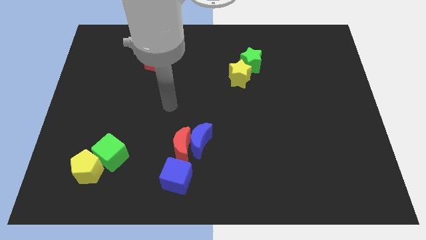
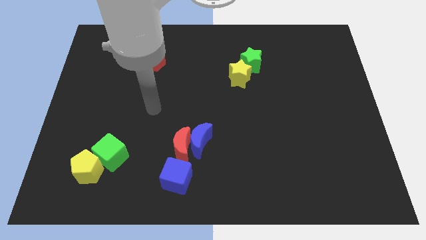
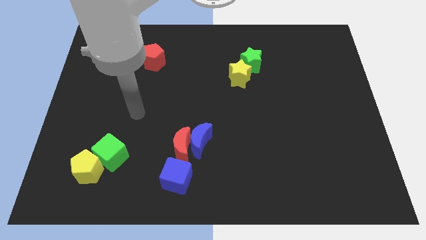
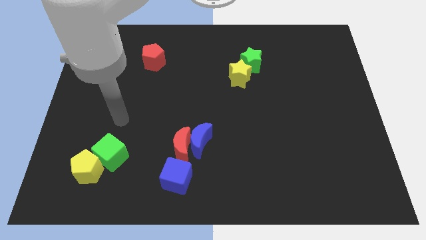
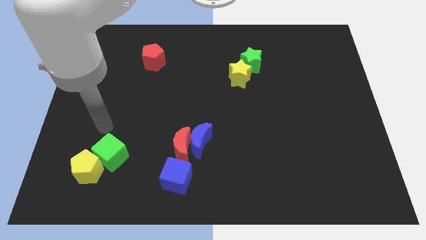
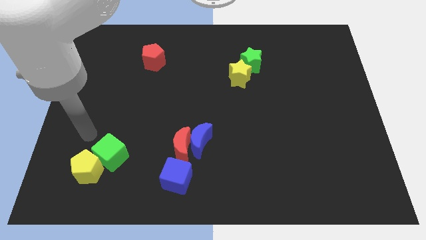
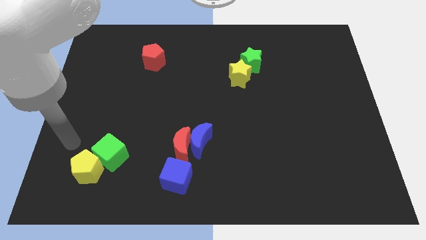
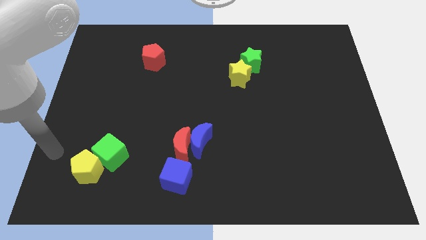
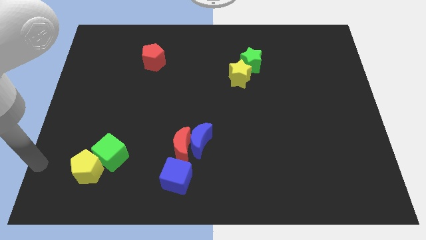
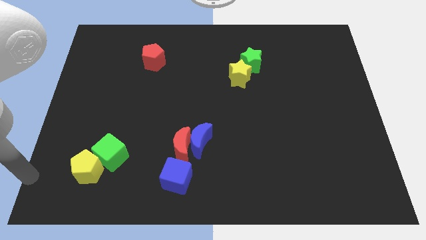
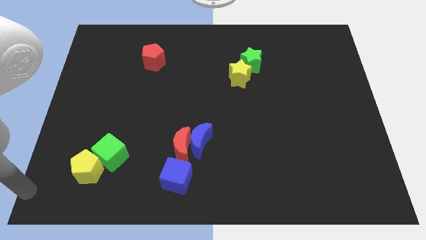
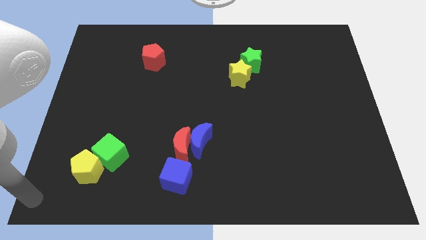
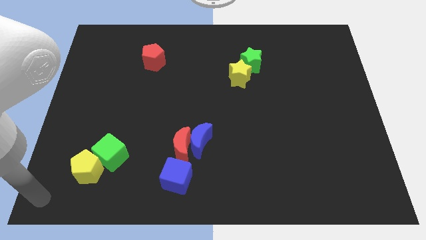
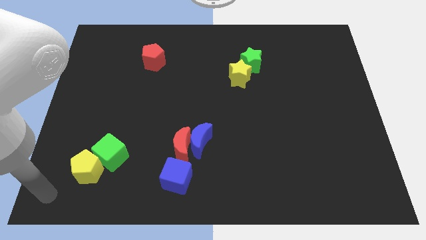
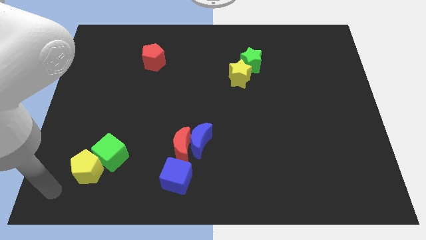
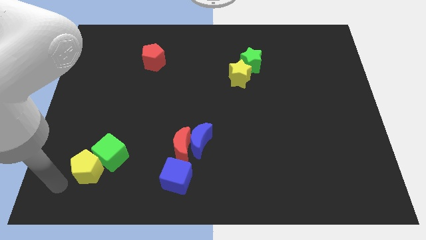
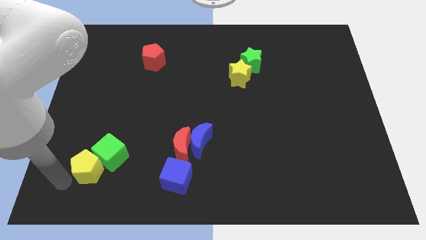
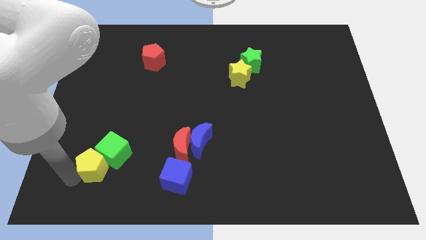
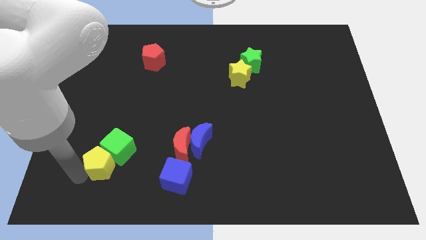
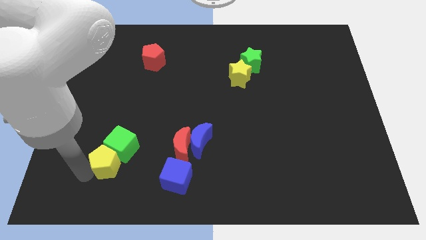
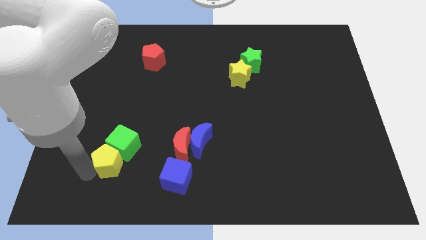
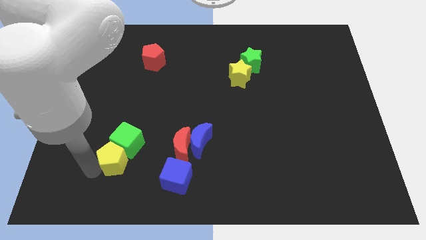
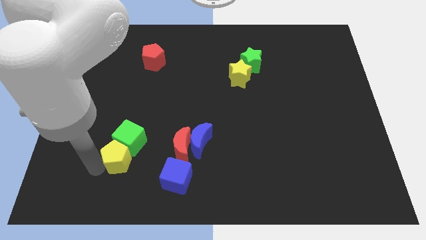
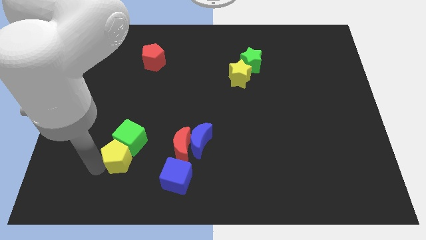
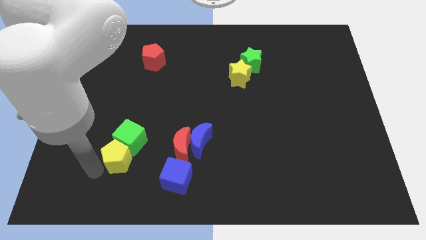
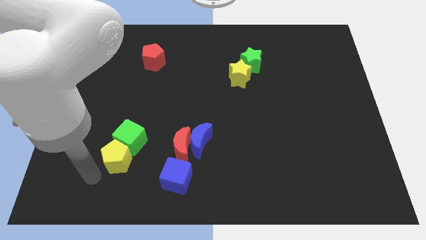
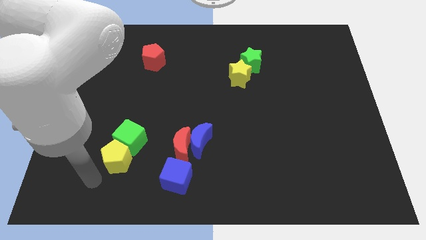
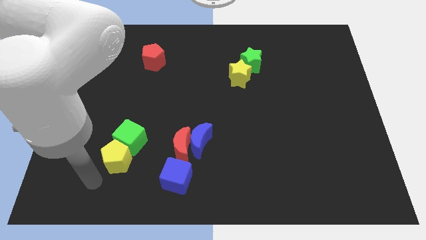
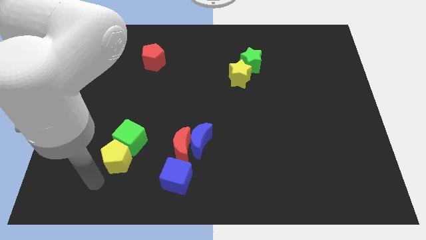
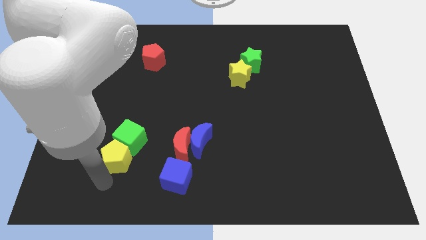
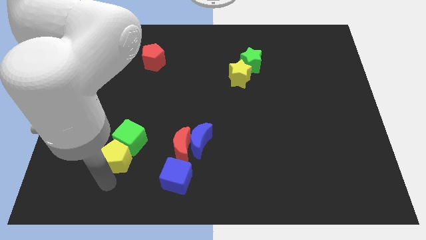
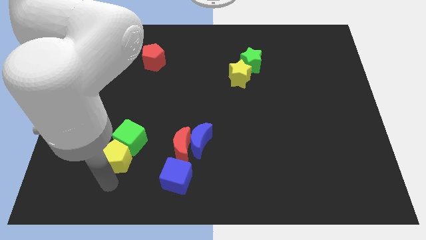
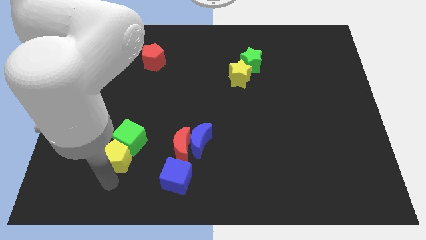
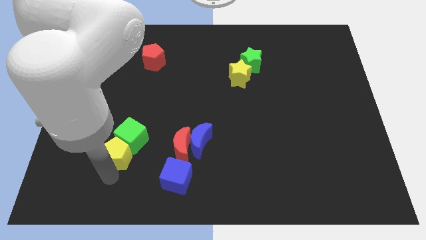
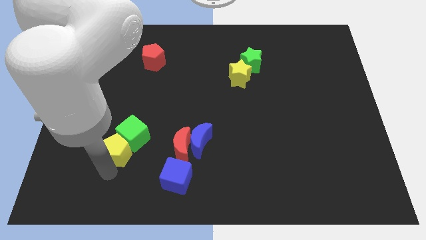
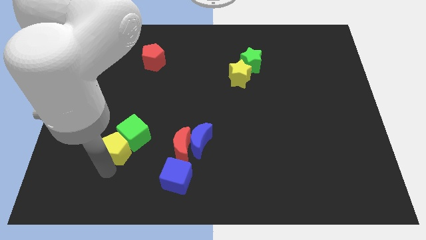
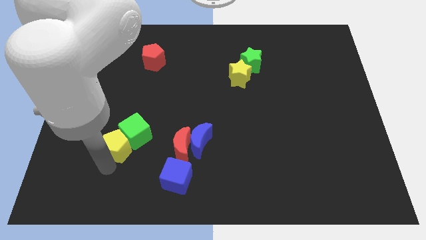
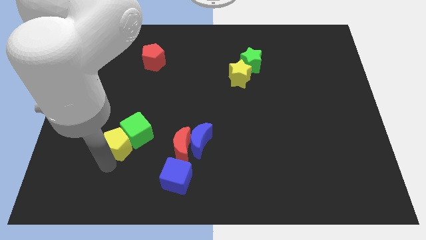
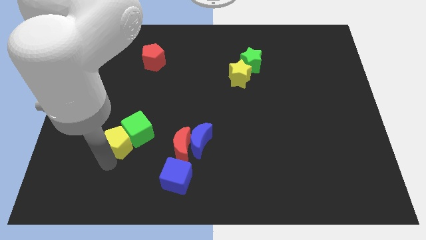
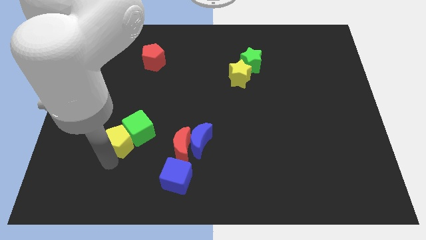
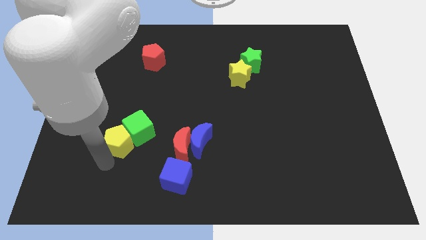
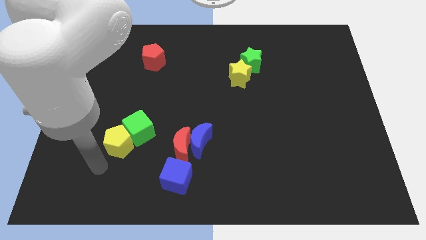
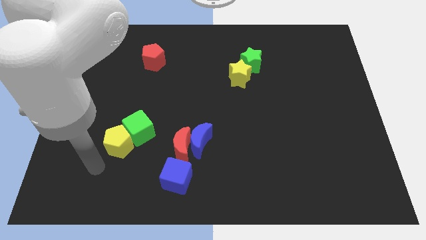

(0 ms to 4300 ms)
slide the yellow pentagon and green cube together towards the center of the board

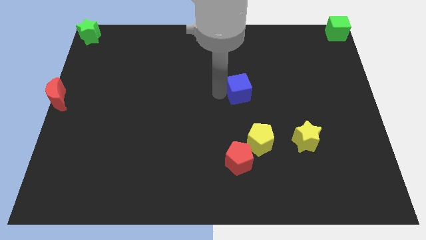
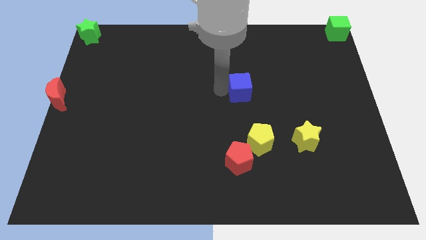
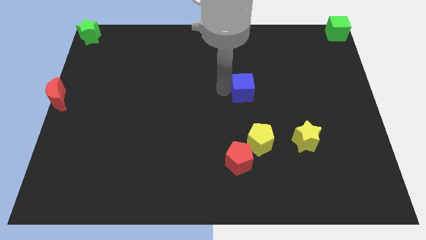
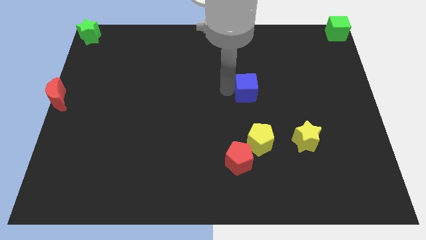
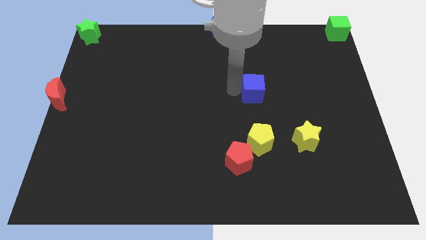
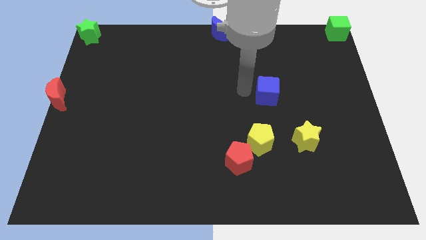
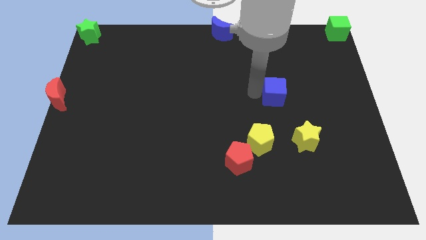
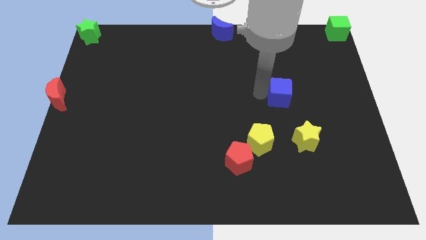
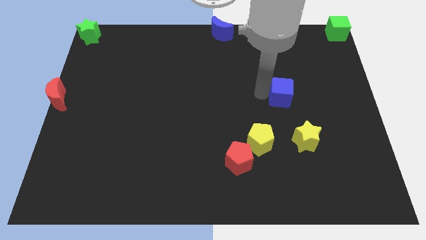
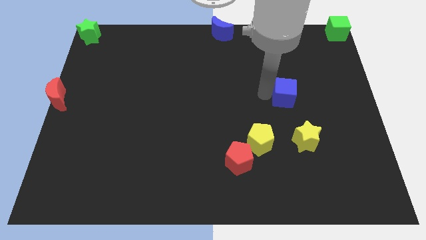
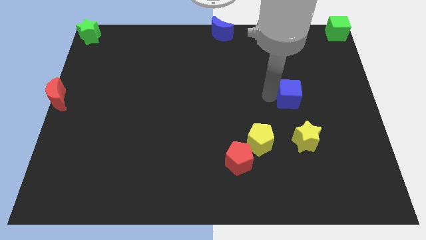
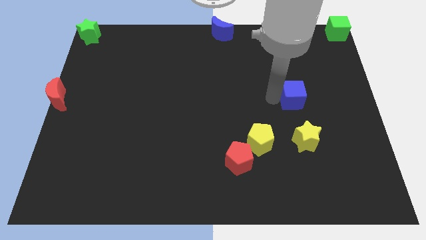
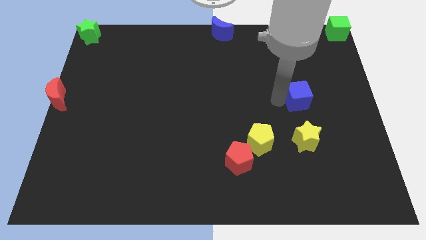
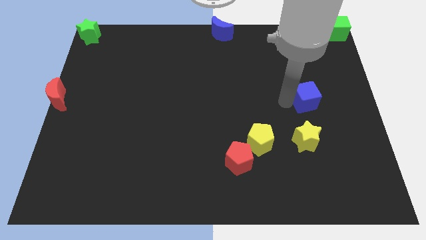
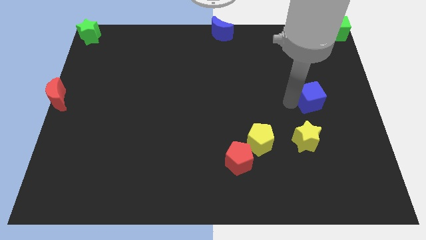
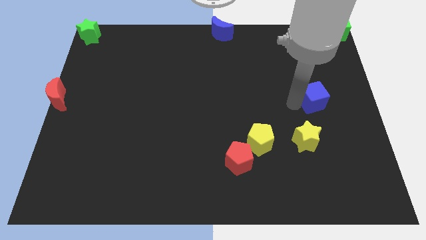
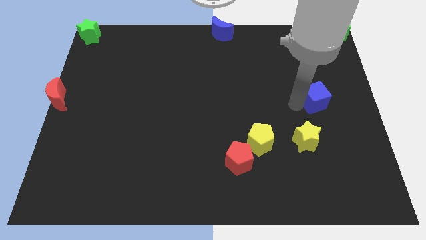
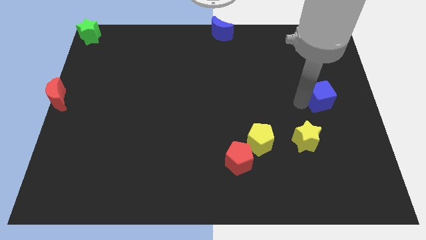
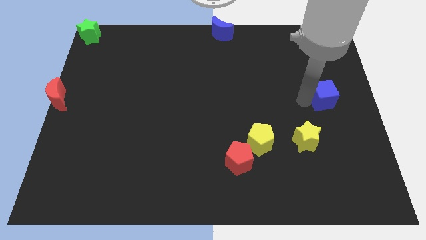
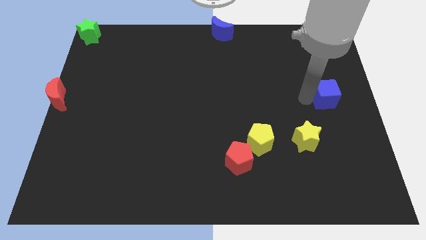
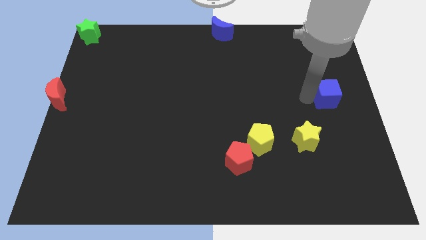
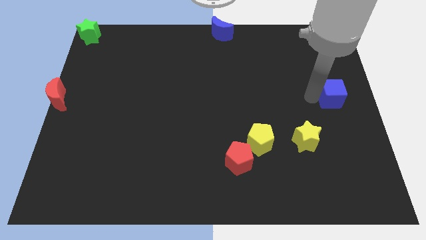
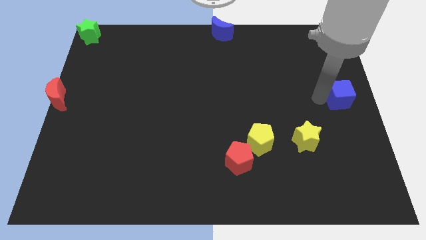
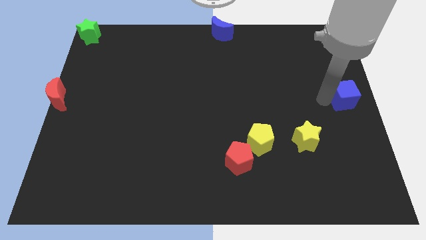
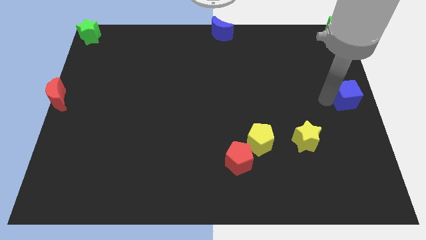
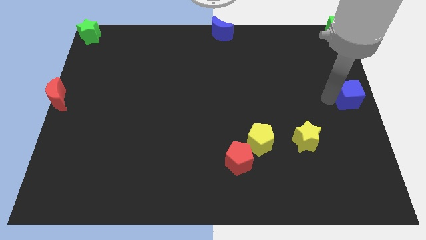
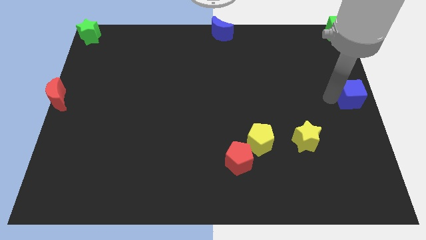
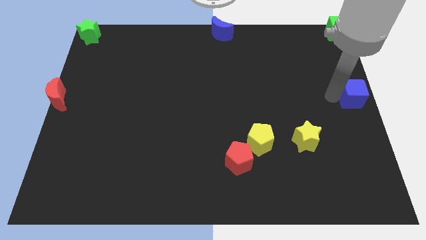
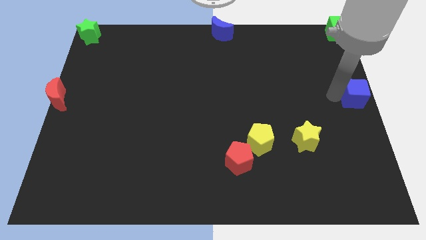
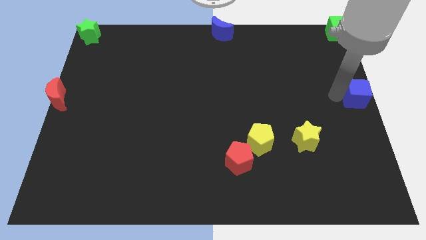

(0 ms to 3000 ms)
put the blue cube to the center right side of the board

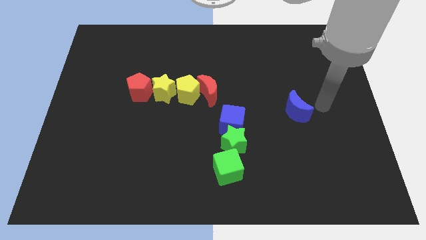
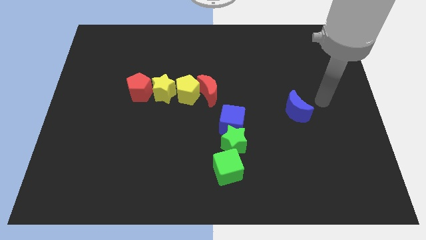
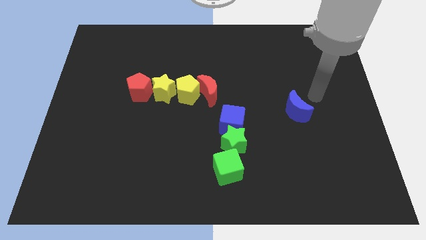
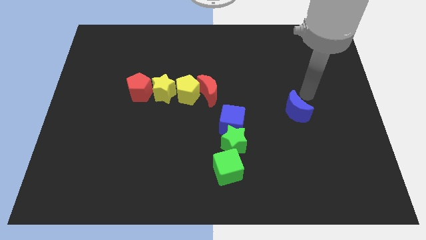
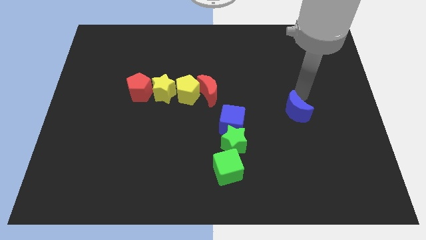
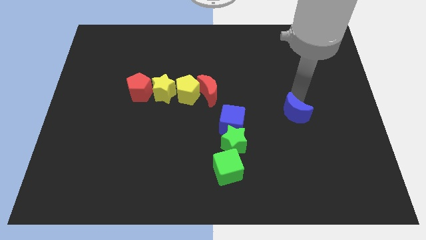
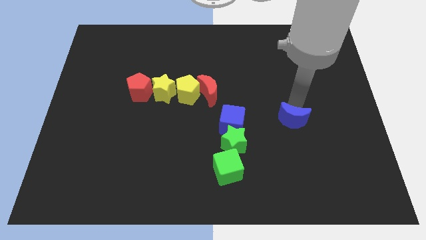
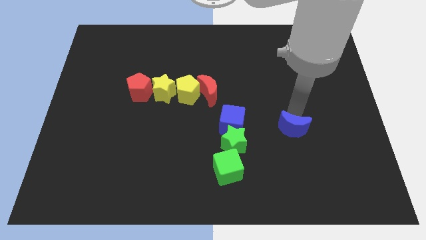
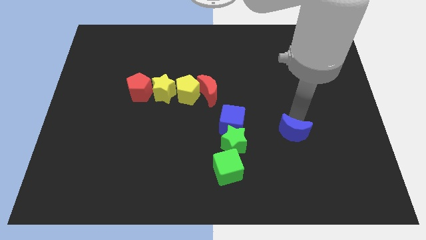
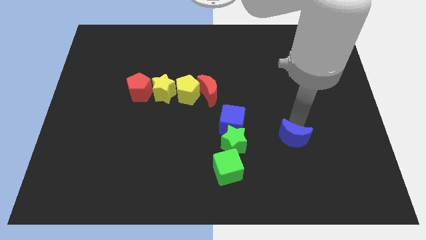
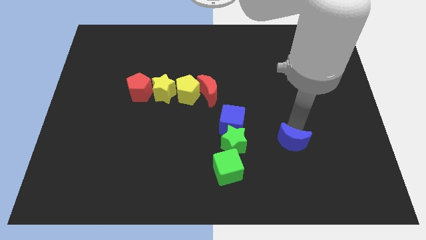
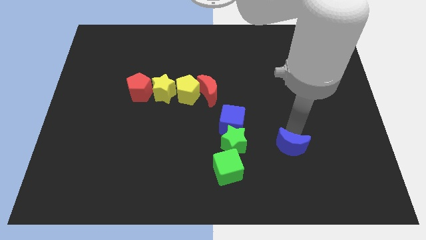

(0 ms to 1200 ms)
push the blue crescent to the right side of the green star

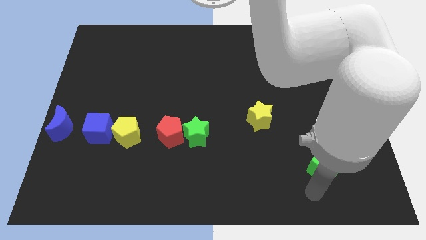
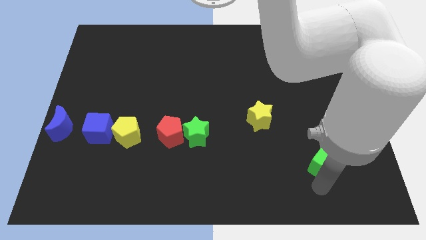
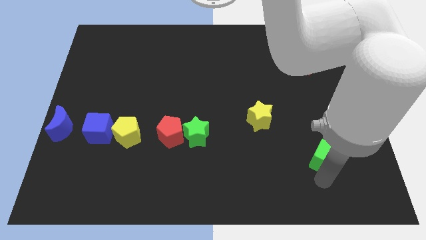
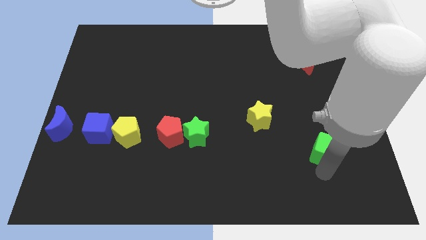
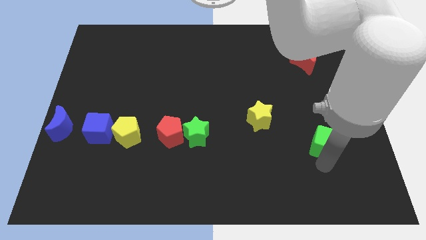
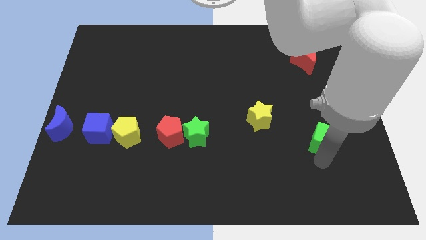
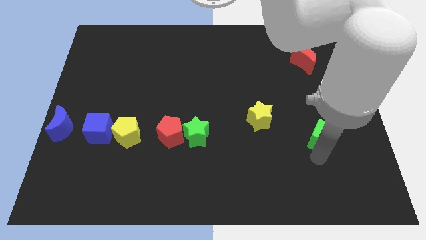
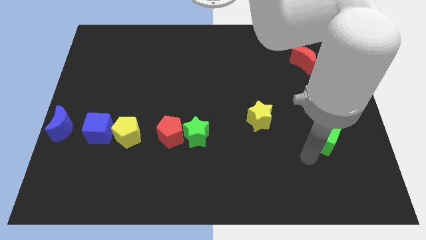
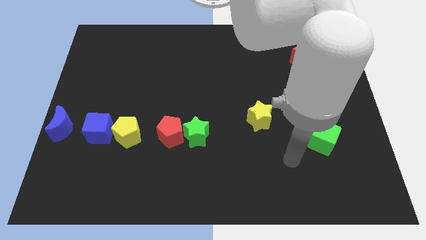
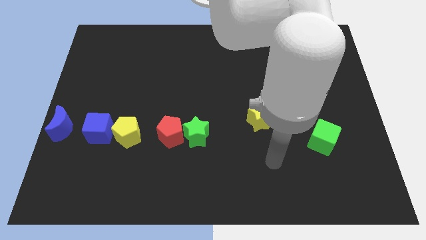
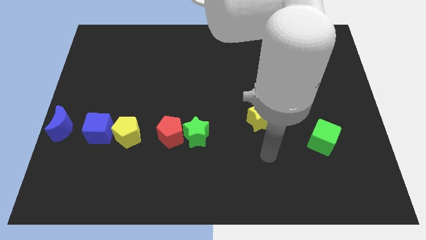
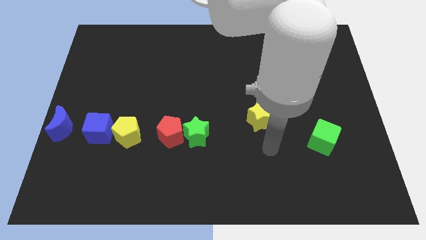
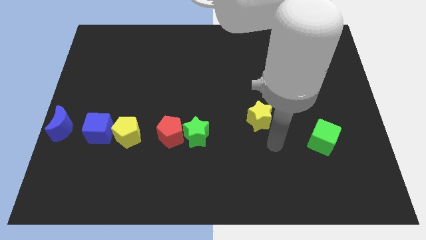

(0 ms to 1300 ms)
move the green cube towards the top
